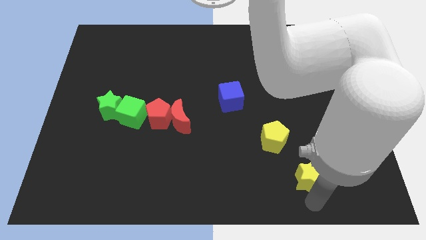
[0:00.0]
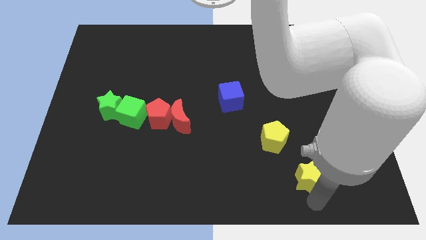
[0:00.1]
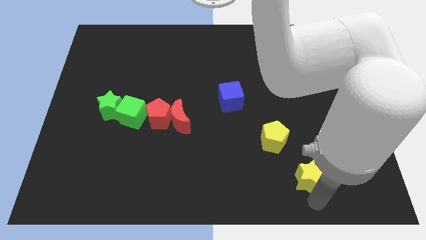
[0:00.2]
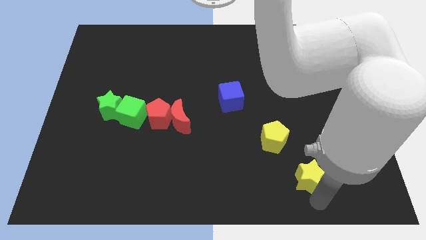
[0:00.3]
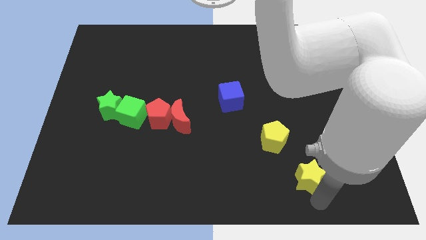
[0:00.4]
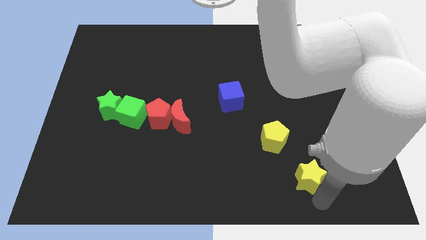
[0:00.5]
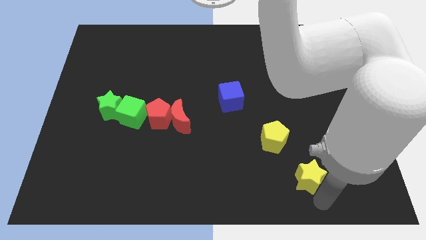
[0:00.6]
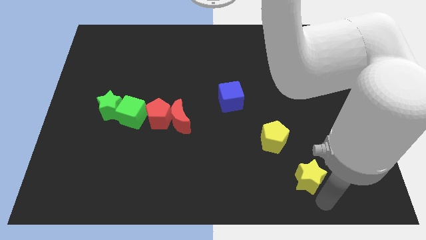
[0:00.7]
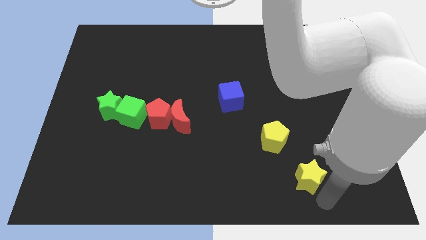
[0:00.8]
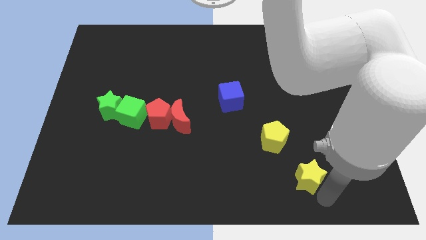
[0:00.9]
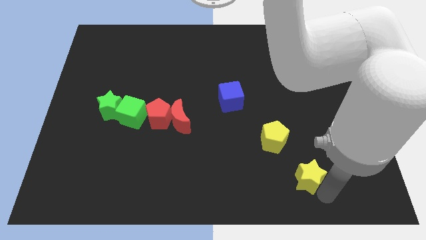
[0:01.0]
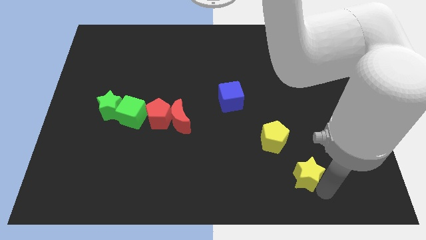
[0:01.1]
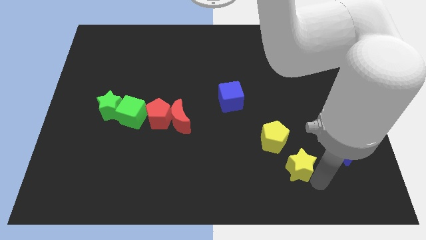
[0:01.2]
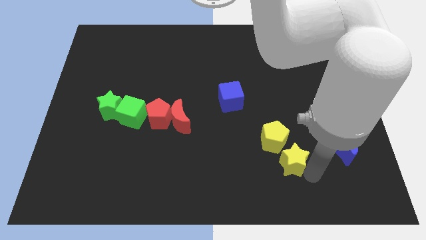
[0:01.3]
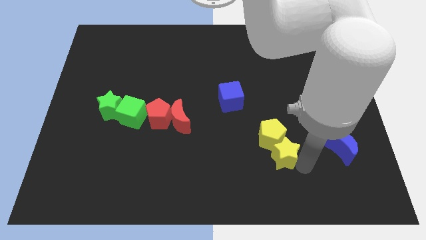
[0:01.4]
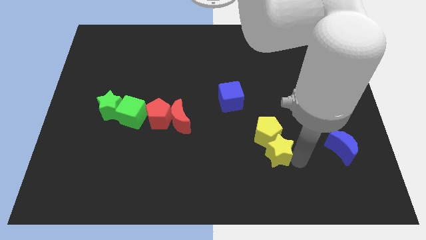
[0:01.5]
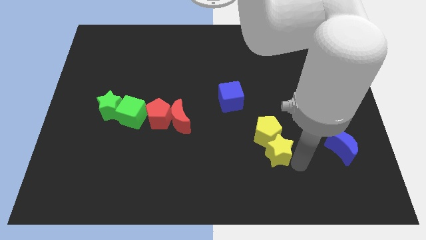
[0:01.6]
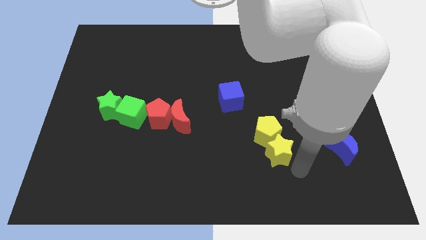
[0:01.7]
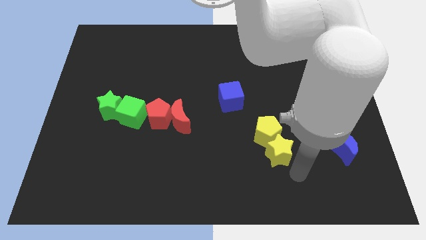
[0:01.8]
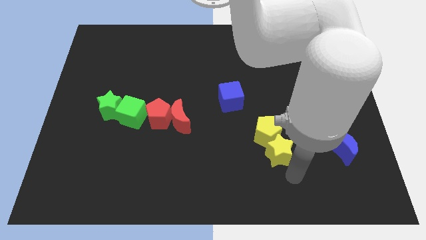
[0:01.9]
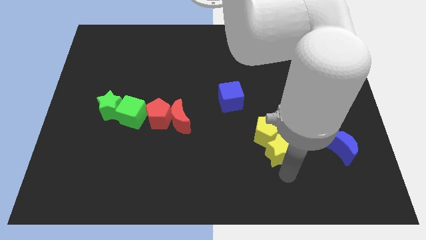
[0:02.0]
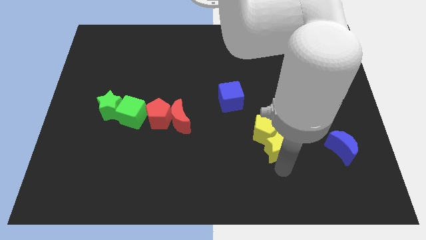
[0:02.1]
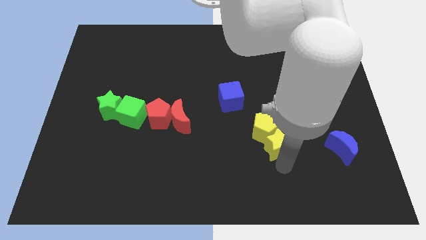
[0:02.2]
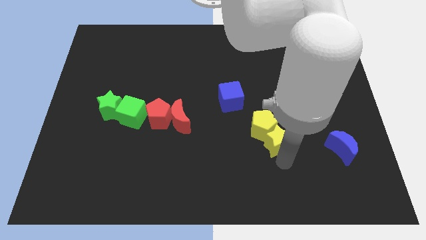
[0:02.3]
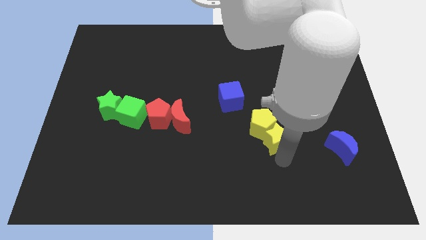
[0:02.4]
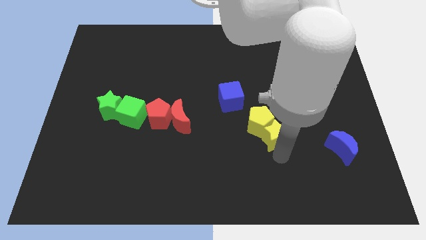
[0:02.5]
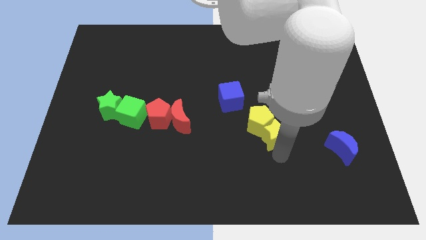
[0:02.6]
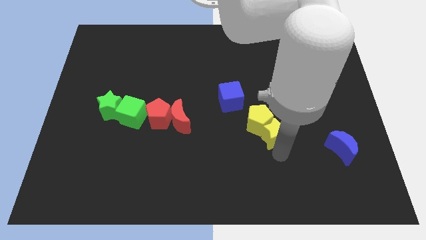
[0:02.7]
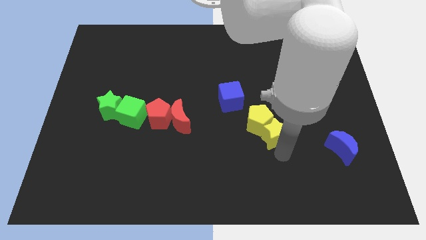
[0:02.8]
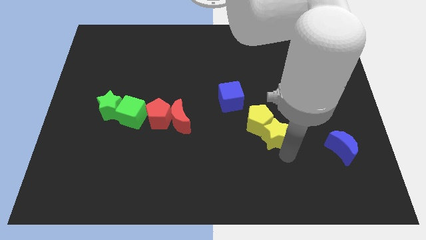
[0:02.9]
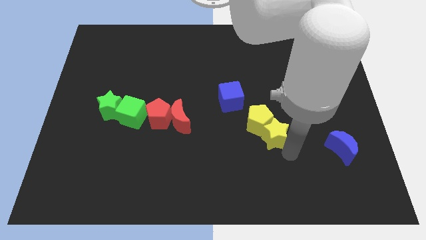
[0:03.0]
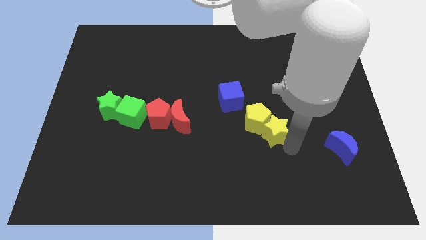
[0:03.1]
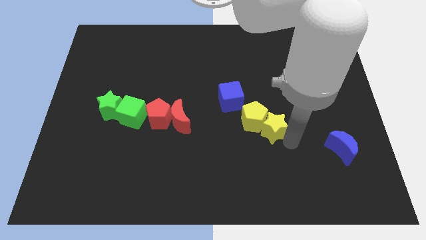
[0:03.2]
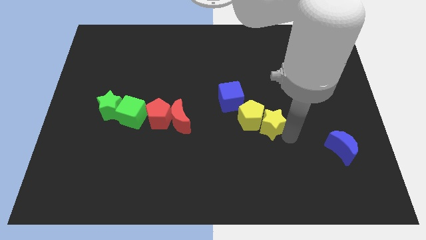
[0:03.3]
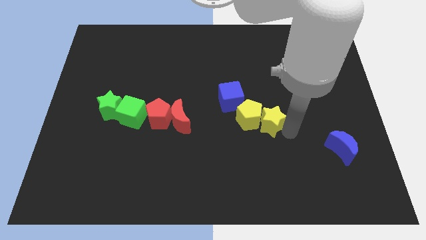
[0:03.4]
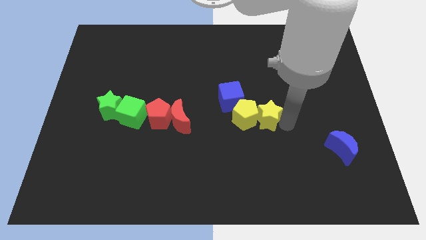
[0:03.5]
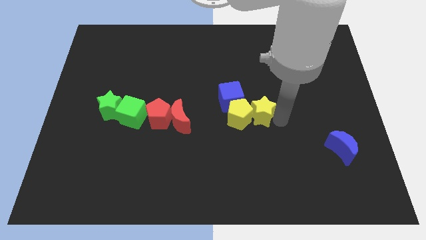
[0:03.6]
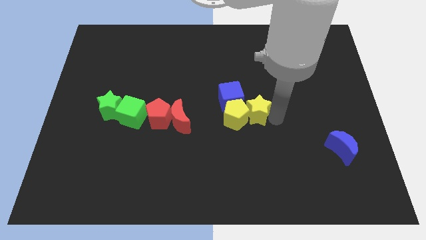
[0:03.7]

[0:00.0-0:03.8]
place the yellow pentagon below blue cube with the help of yellow star

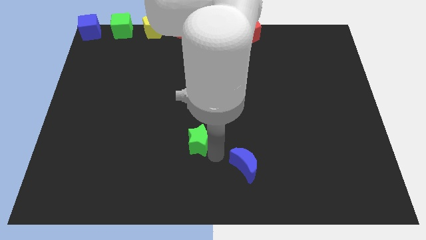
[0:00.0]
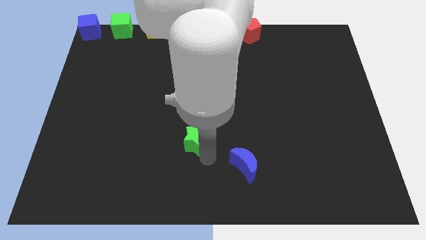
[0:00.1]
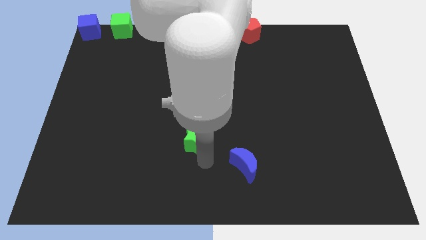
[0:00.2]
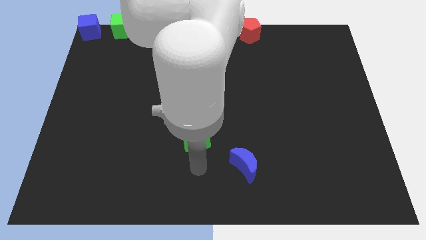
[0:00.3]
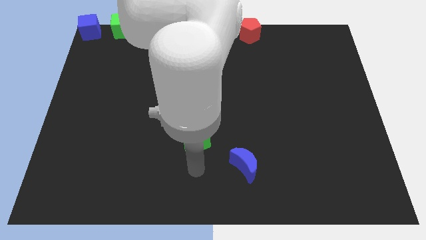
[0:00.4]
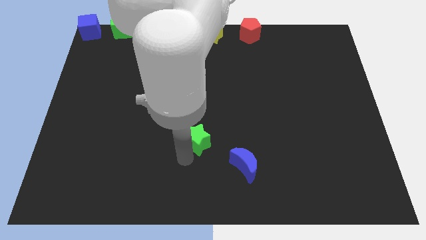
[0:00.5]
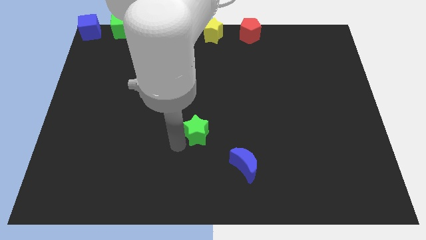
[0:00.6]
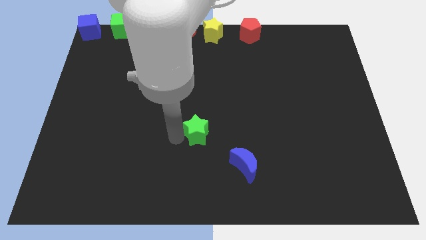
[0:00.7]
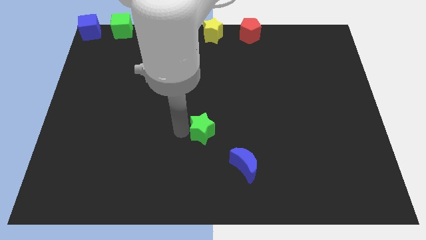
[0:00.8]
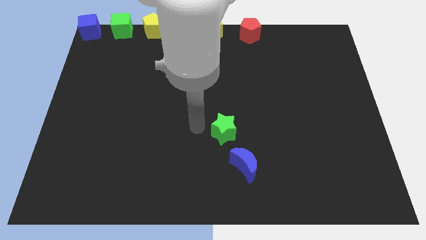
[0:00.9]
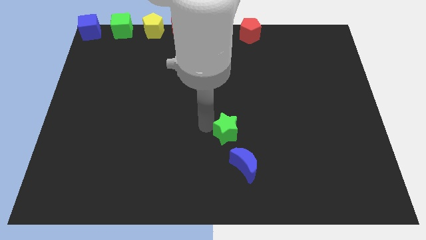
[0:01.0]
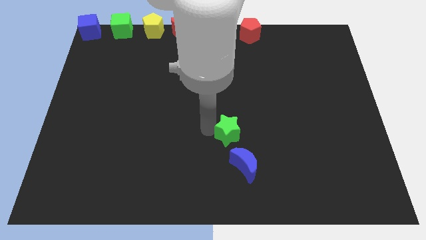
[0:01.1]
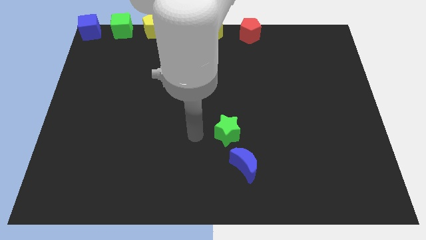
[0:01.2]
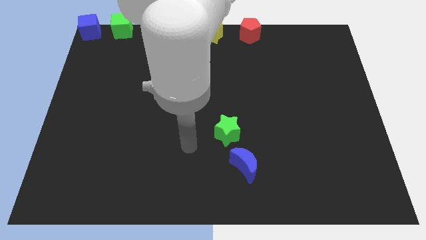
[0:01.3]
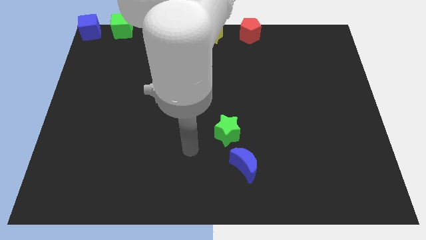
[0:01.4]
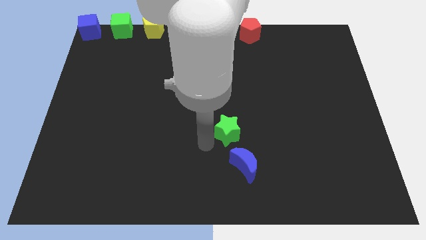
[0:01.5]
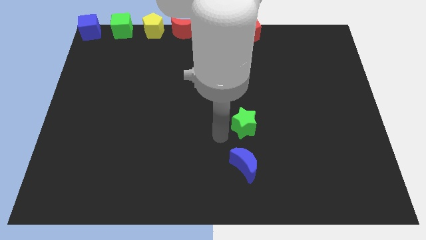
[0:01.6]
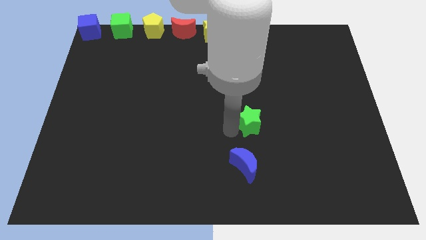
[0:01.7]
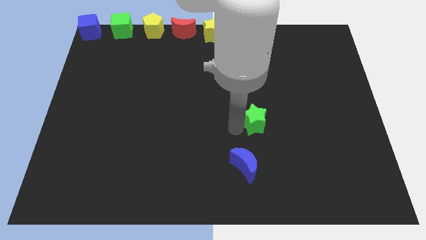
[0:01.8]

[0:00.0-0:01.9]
put the green star above the blue moon

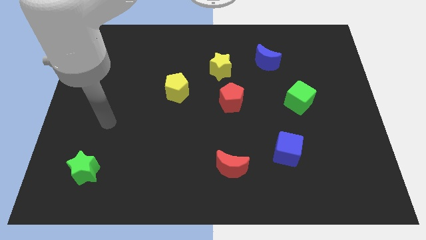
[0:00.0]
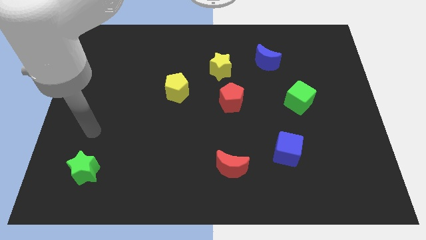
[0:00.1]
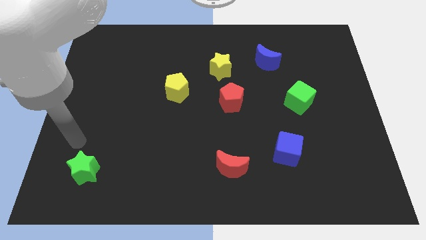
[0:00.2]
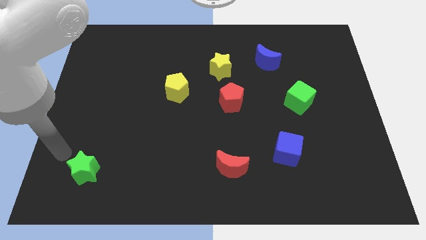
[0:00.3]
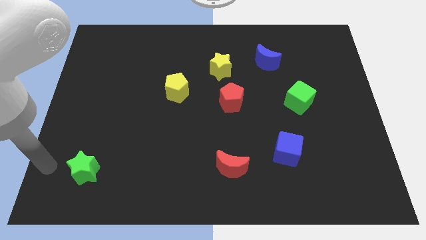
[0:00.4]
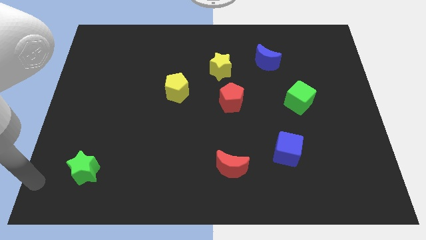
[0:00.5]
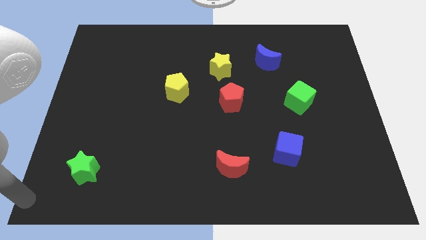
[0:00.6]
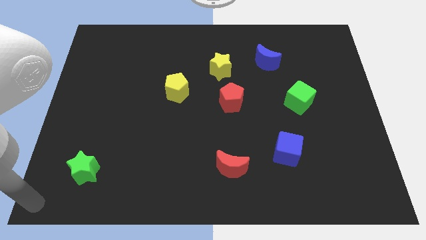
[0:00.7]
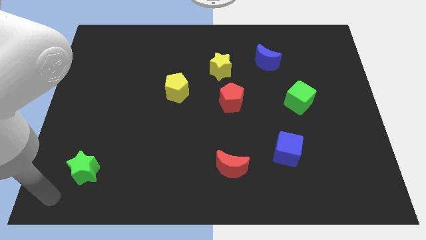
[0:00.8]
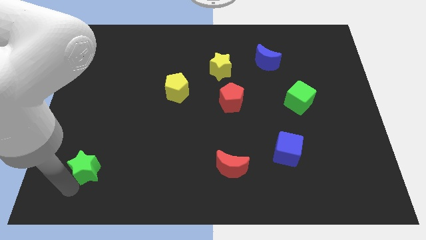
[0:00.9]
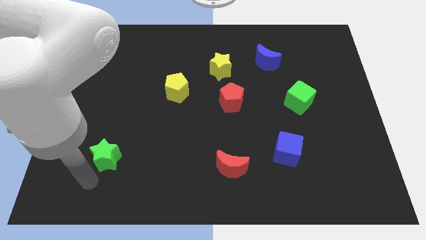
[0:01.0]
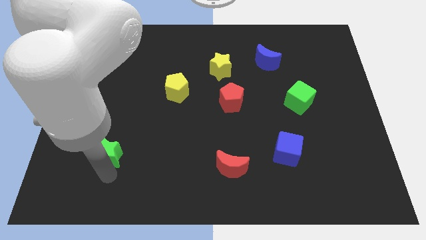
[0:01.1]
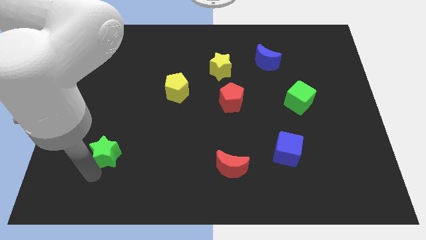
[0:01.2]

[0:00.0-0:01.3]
push the green star towards the yellow pentagon

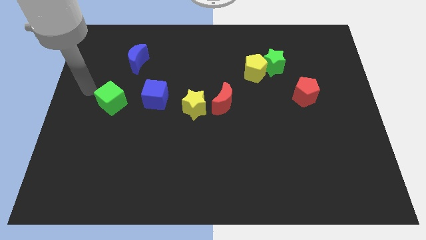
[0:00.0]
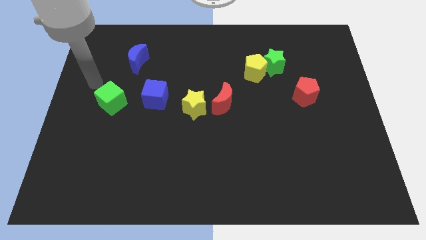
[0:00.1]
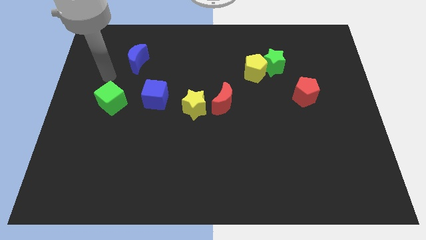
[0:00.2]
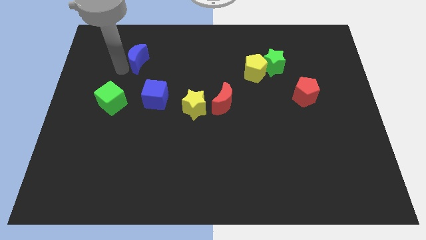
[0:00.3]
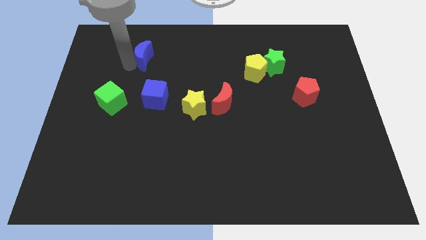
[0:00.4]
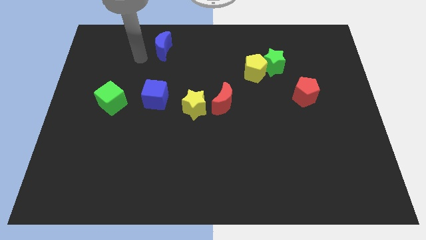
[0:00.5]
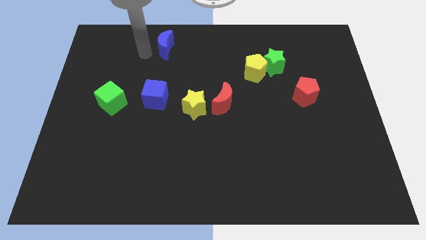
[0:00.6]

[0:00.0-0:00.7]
push the blue crescent to the right

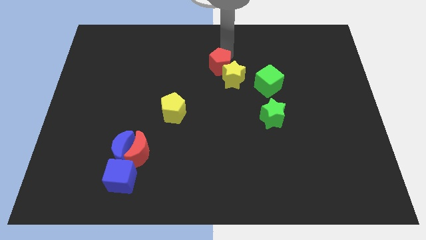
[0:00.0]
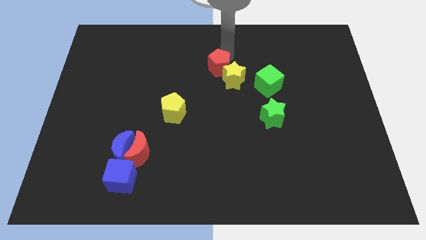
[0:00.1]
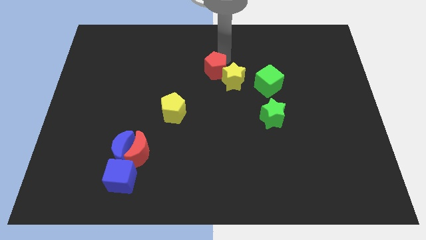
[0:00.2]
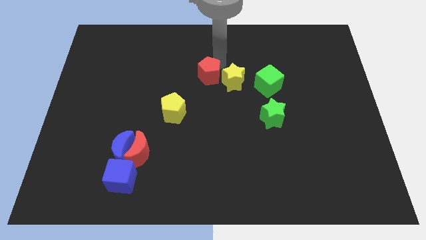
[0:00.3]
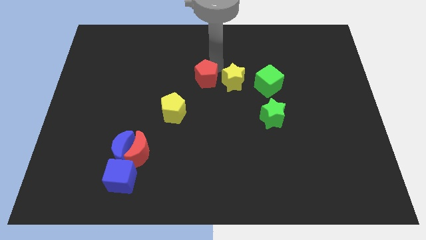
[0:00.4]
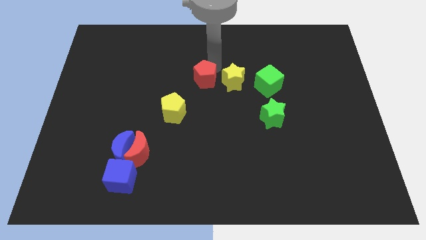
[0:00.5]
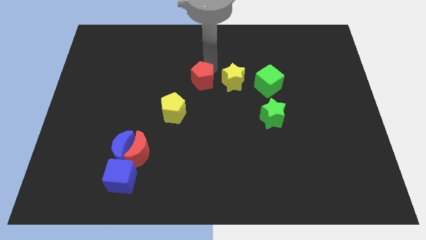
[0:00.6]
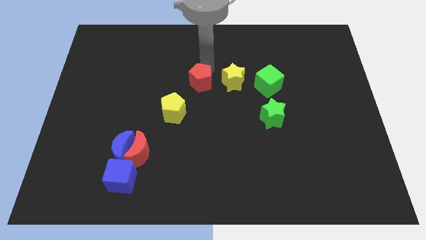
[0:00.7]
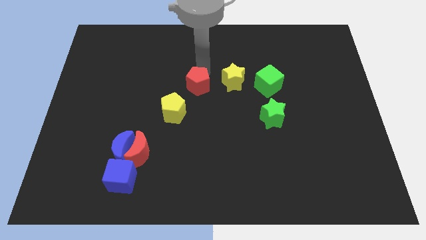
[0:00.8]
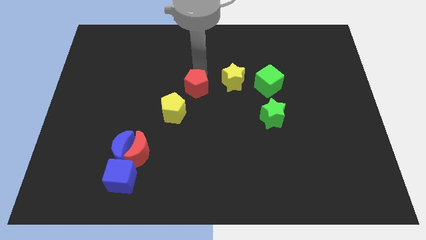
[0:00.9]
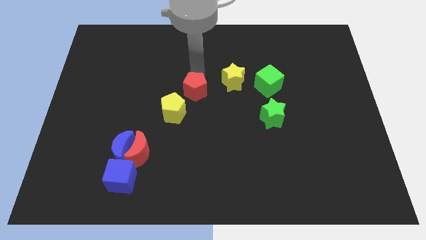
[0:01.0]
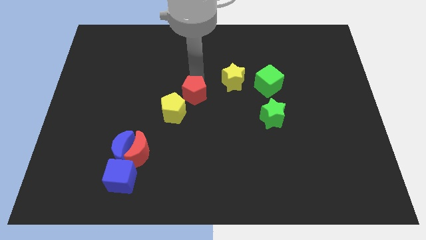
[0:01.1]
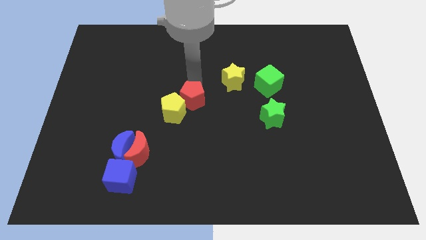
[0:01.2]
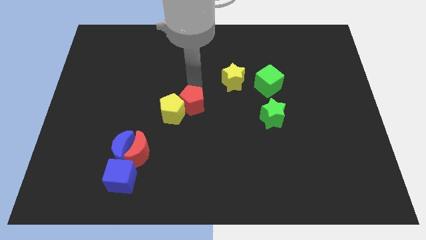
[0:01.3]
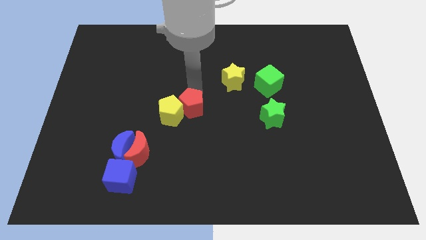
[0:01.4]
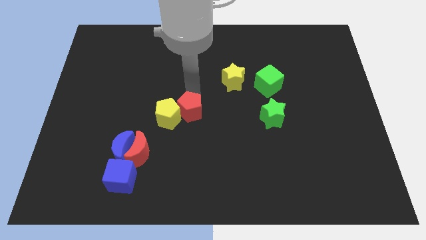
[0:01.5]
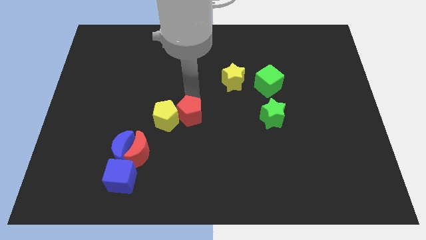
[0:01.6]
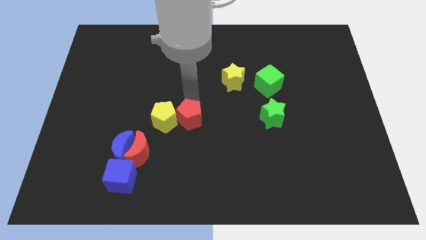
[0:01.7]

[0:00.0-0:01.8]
push the red pentagon into the right of the yellow pentagon
